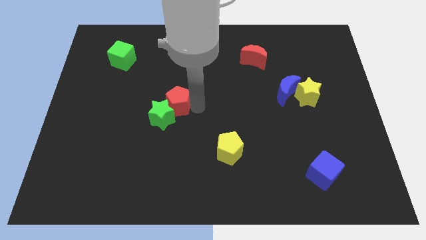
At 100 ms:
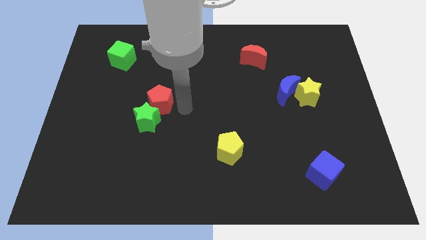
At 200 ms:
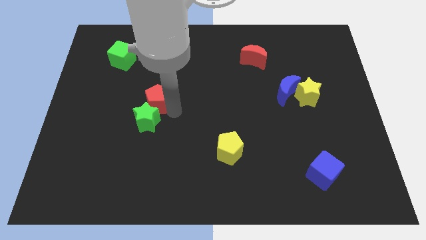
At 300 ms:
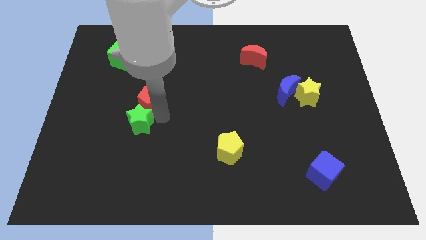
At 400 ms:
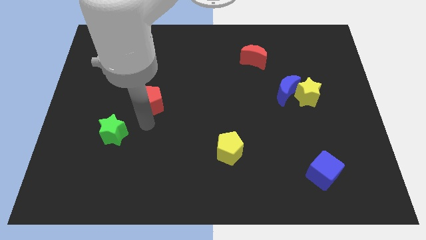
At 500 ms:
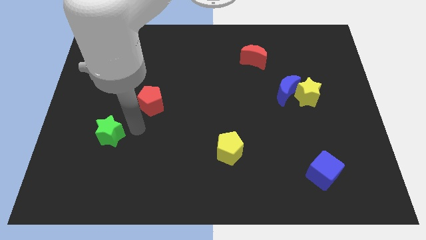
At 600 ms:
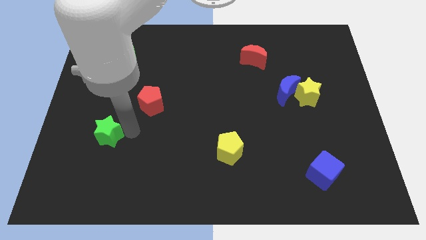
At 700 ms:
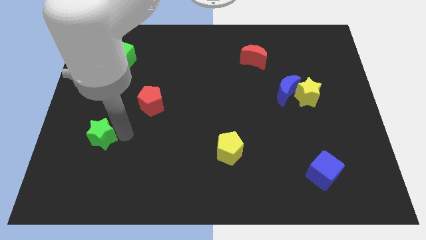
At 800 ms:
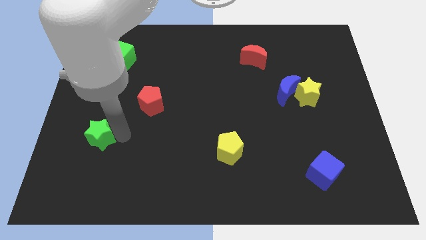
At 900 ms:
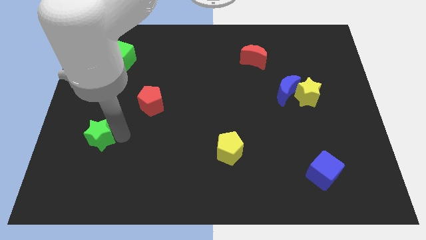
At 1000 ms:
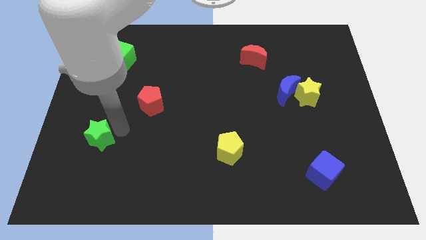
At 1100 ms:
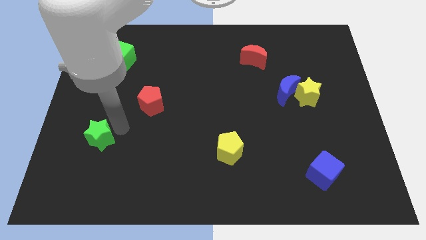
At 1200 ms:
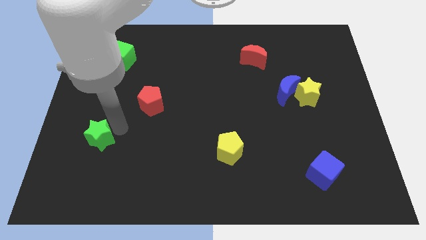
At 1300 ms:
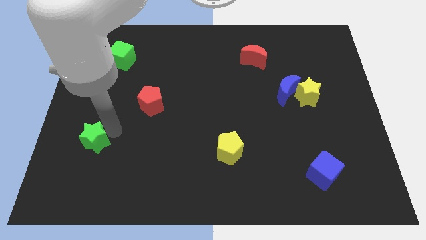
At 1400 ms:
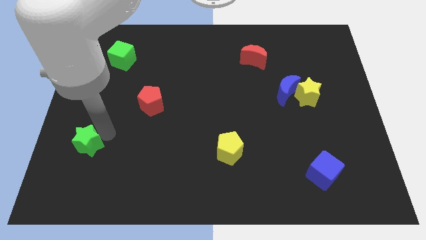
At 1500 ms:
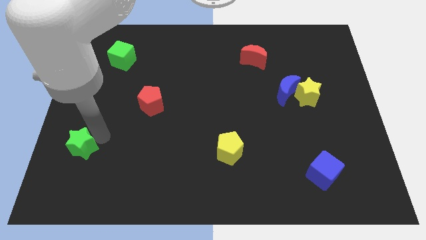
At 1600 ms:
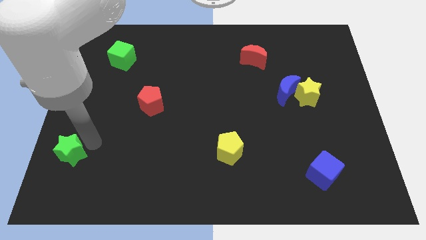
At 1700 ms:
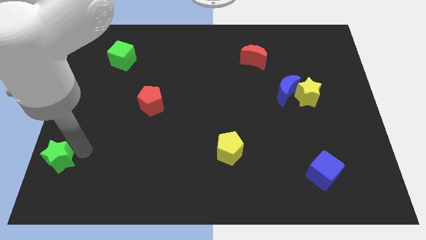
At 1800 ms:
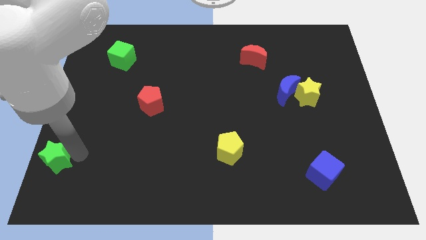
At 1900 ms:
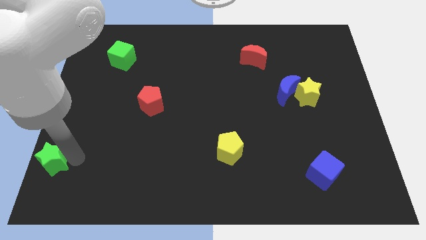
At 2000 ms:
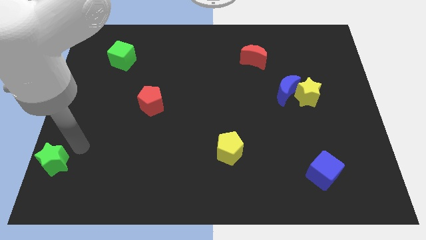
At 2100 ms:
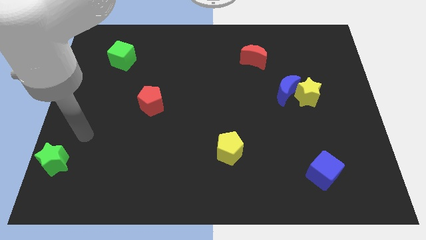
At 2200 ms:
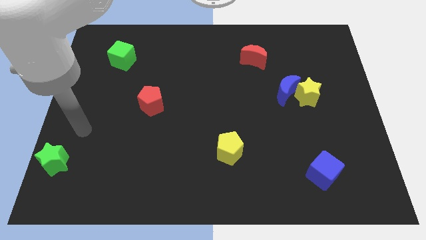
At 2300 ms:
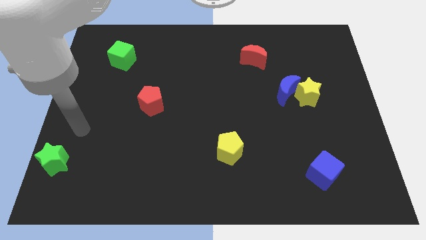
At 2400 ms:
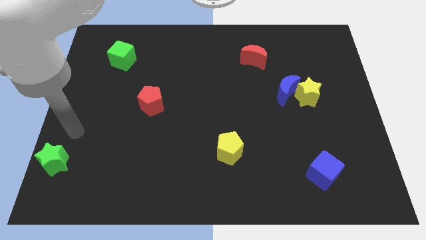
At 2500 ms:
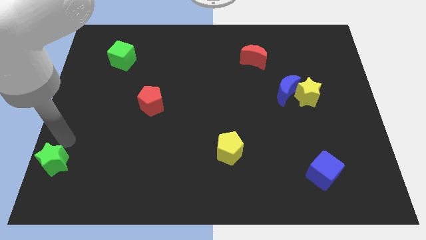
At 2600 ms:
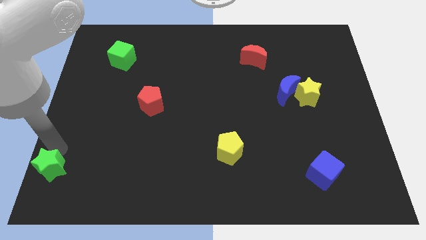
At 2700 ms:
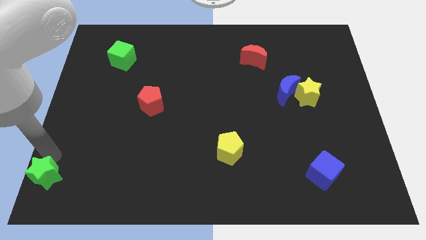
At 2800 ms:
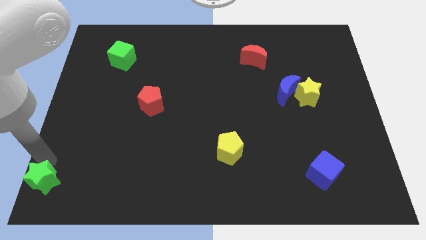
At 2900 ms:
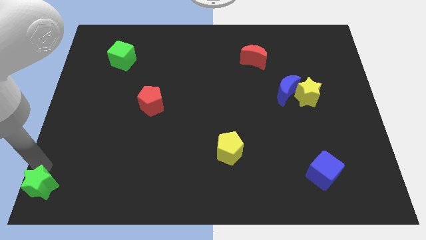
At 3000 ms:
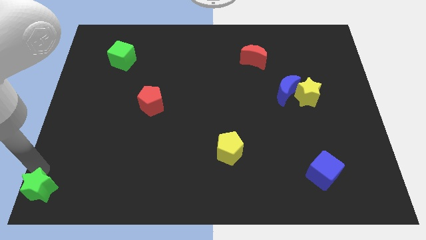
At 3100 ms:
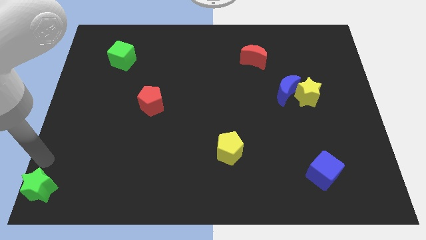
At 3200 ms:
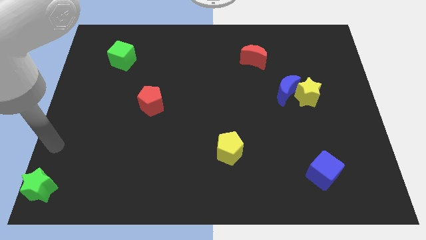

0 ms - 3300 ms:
move the green star to the left bottom

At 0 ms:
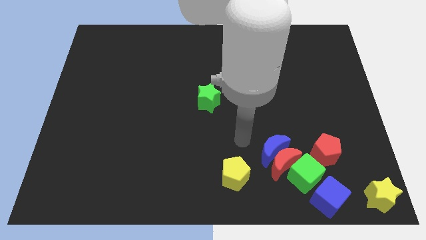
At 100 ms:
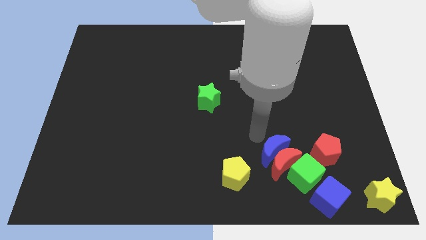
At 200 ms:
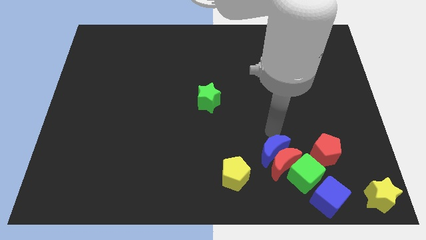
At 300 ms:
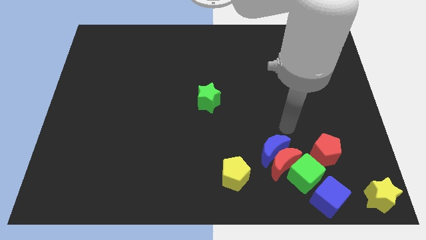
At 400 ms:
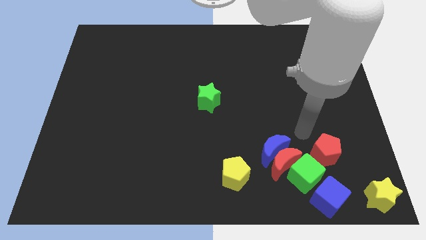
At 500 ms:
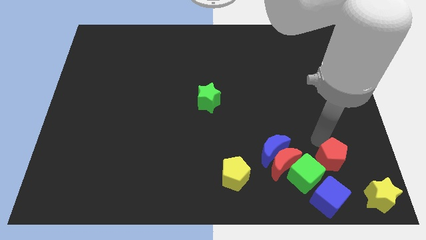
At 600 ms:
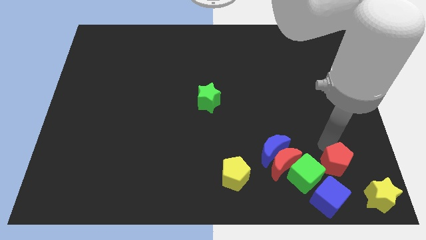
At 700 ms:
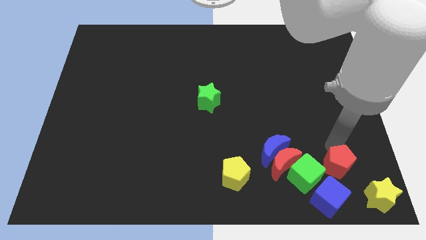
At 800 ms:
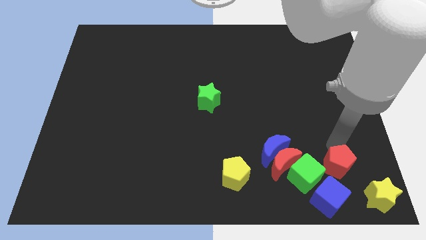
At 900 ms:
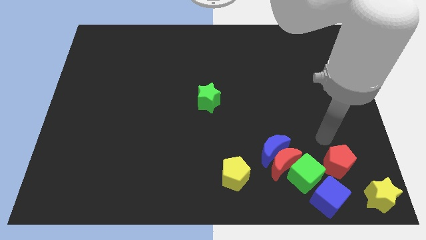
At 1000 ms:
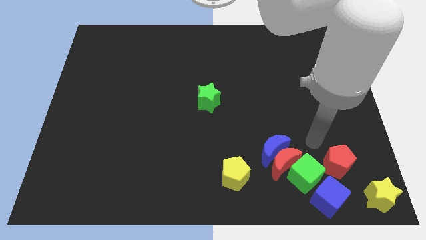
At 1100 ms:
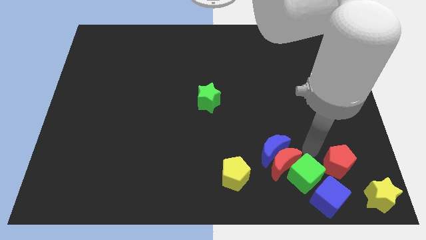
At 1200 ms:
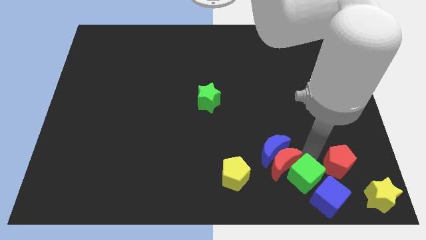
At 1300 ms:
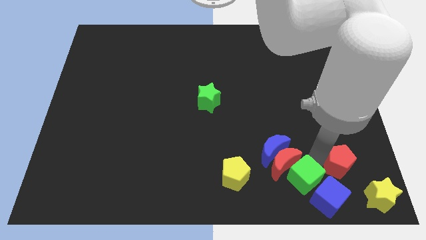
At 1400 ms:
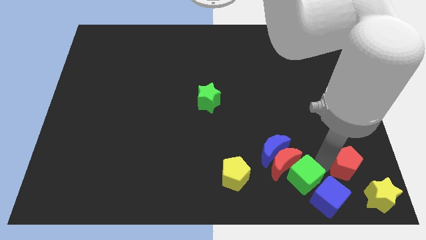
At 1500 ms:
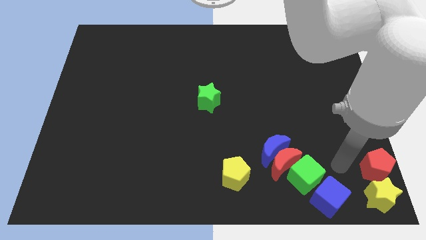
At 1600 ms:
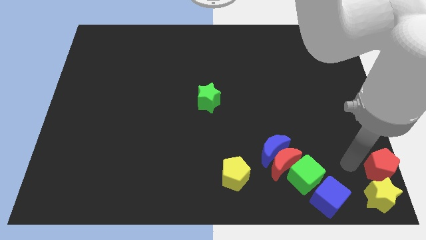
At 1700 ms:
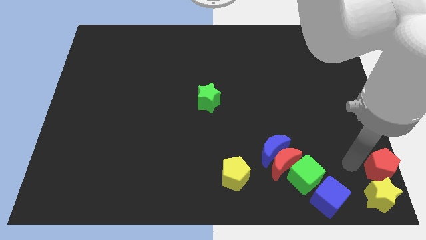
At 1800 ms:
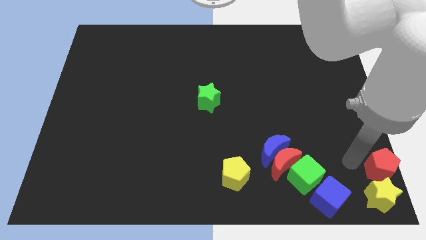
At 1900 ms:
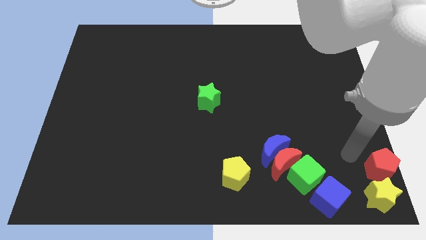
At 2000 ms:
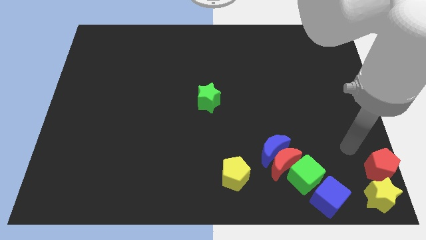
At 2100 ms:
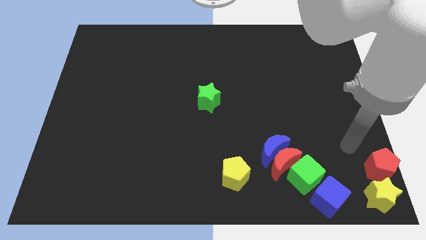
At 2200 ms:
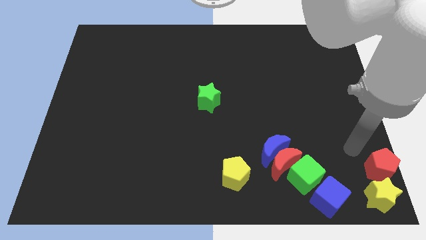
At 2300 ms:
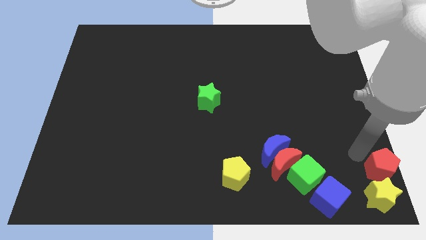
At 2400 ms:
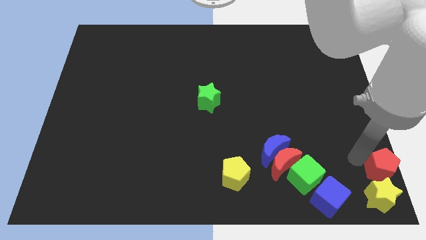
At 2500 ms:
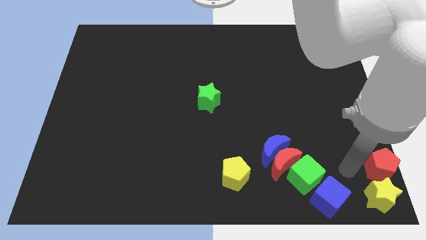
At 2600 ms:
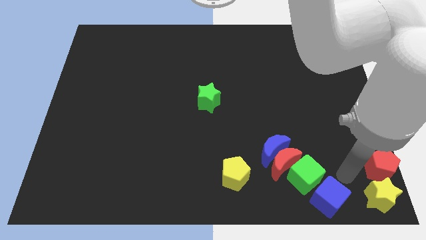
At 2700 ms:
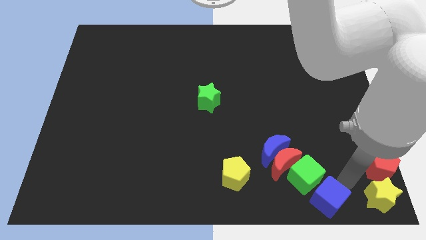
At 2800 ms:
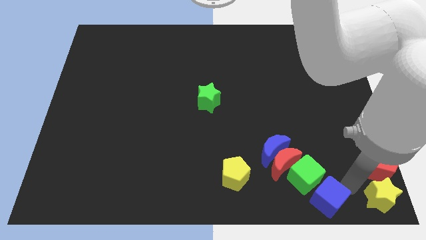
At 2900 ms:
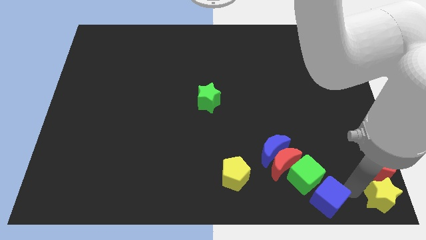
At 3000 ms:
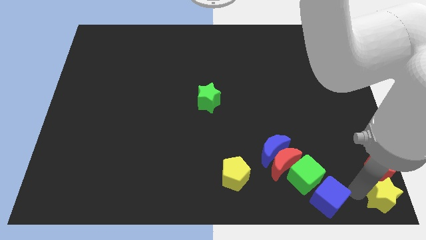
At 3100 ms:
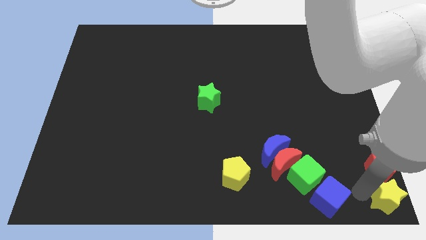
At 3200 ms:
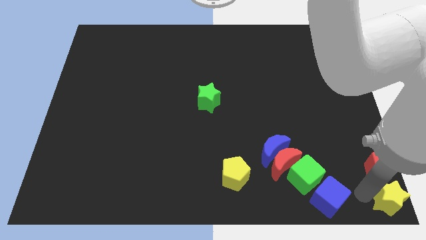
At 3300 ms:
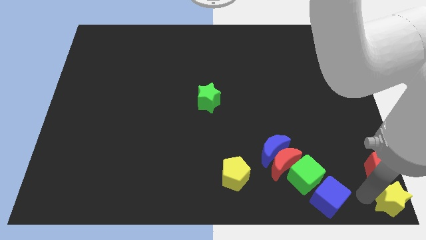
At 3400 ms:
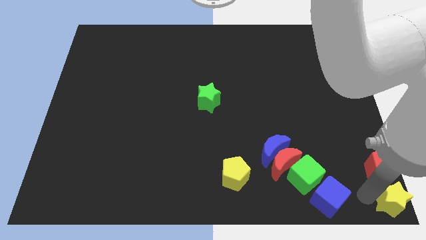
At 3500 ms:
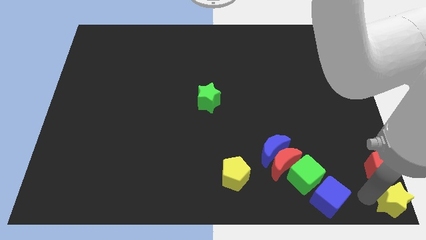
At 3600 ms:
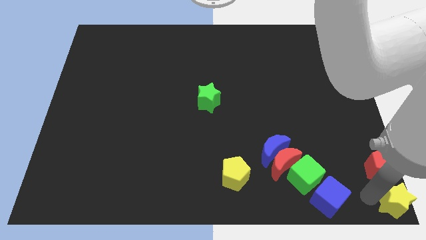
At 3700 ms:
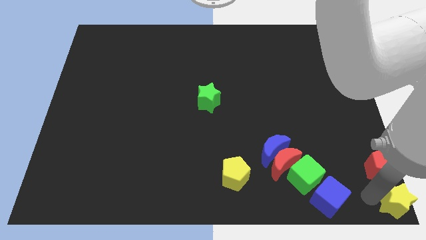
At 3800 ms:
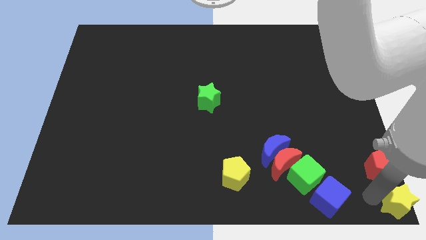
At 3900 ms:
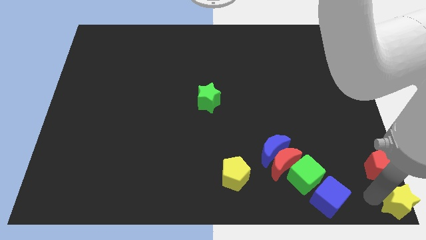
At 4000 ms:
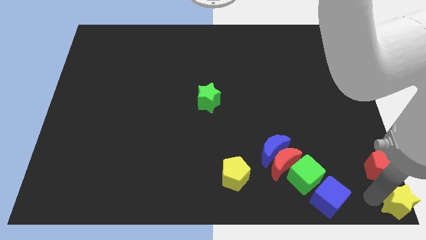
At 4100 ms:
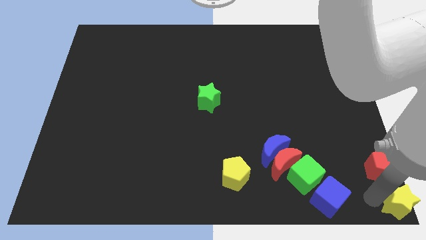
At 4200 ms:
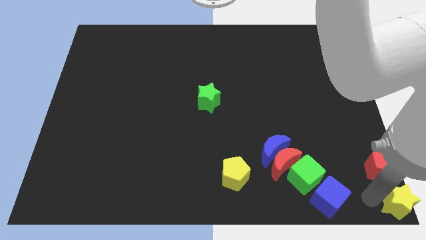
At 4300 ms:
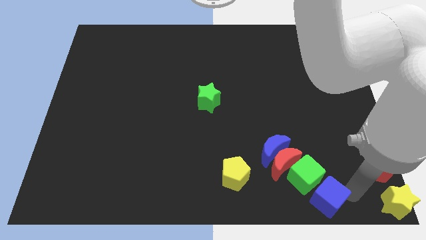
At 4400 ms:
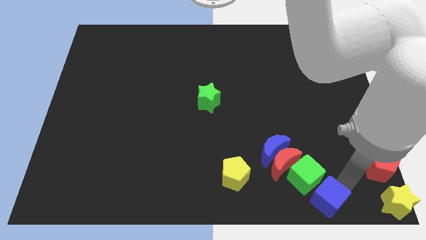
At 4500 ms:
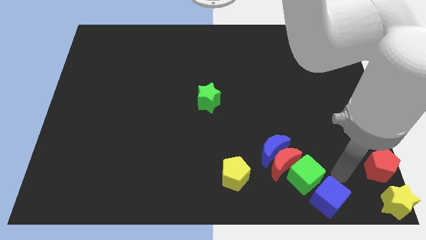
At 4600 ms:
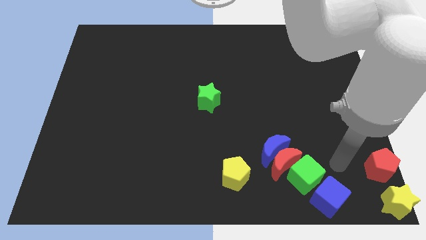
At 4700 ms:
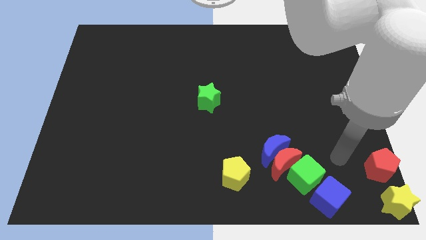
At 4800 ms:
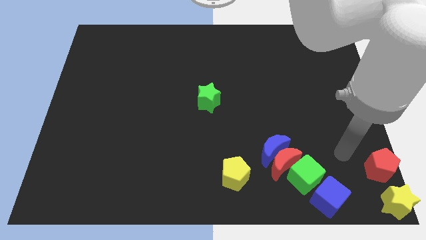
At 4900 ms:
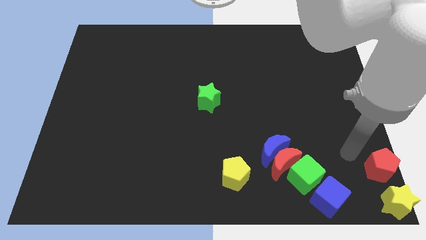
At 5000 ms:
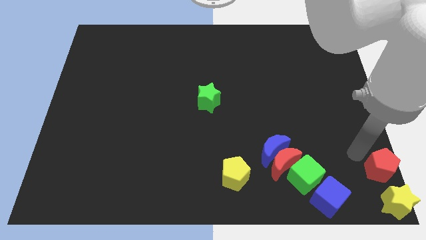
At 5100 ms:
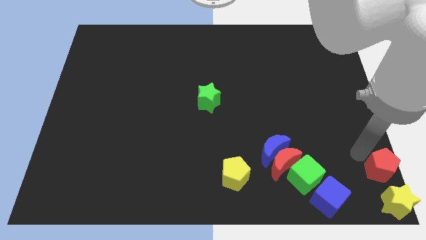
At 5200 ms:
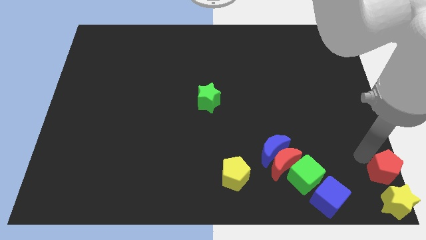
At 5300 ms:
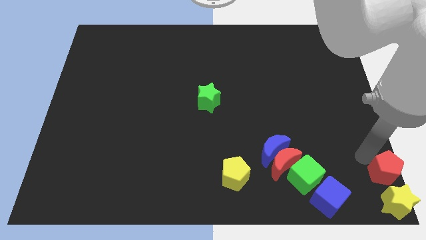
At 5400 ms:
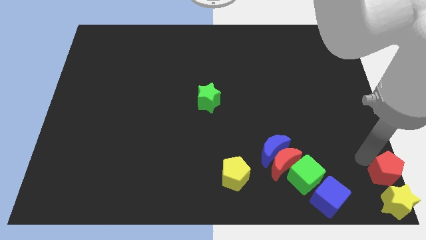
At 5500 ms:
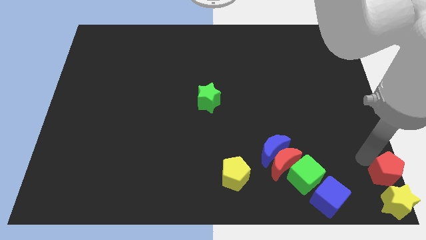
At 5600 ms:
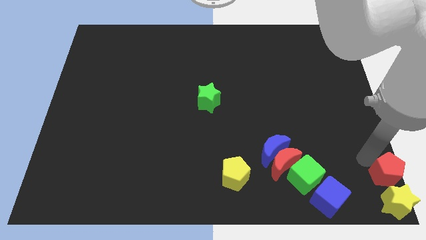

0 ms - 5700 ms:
push the red pentagon and the yellow star at the bottom right corner of the board
